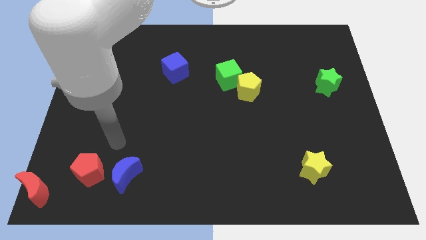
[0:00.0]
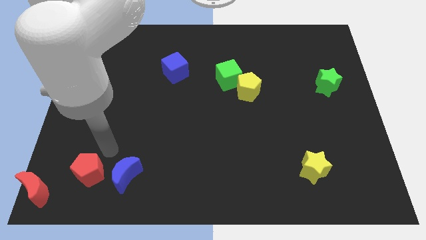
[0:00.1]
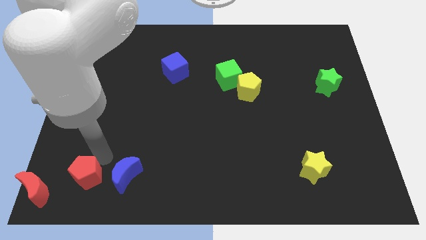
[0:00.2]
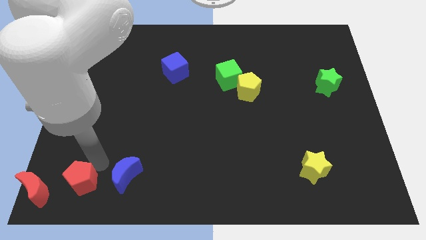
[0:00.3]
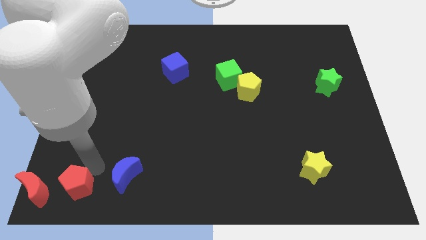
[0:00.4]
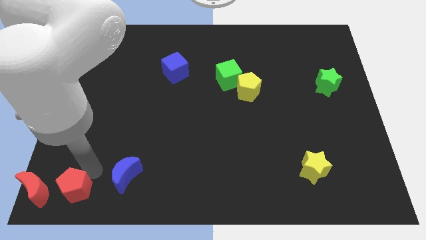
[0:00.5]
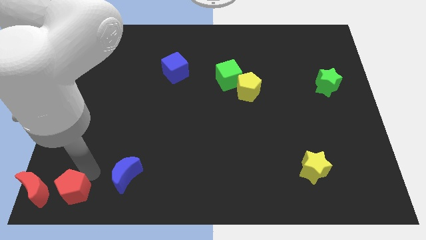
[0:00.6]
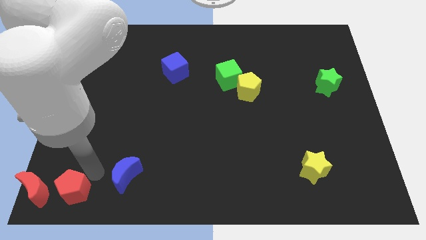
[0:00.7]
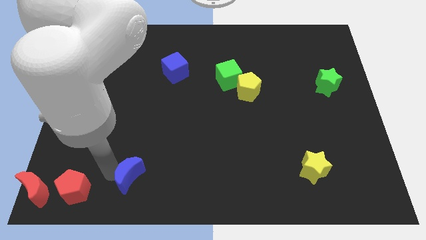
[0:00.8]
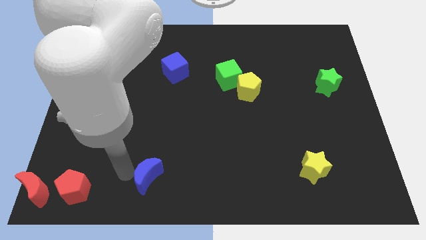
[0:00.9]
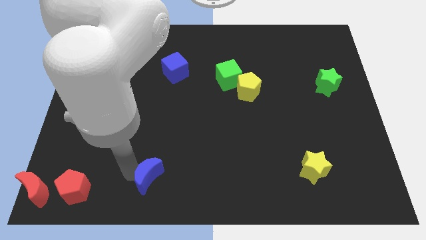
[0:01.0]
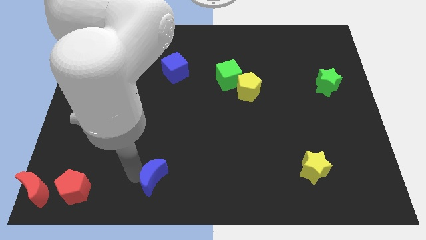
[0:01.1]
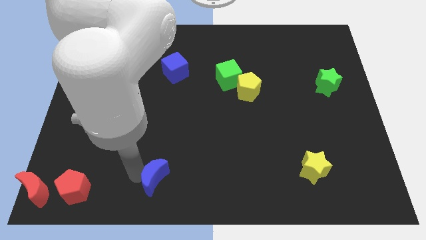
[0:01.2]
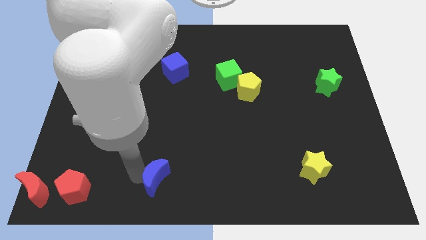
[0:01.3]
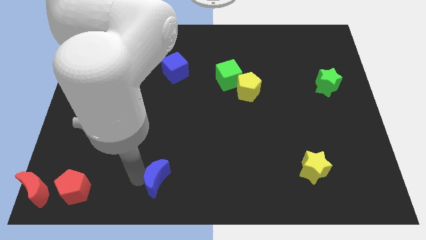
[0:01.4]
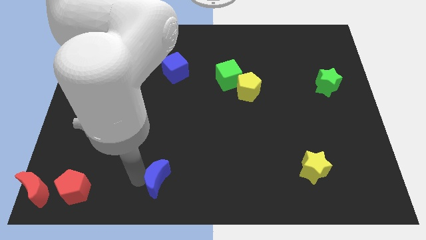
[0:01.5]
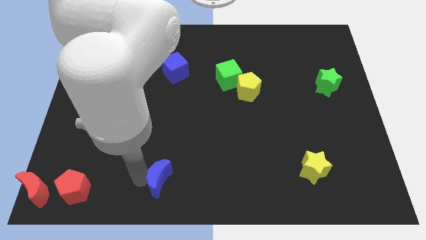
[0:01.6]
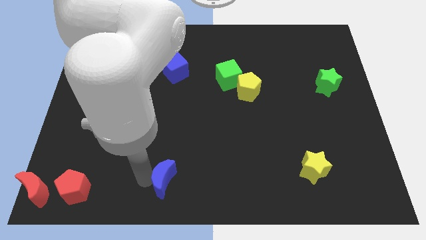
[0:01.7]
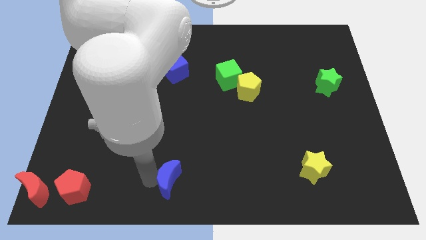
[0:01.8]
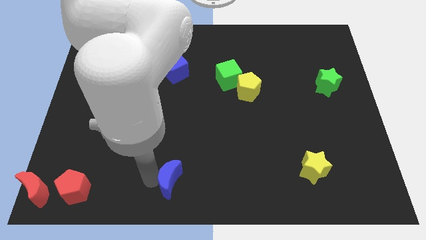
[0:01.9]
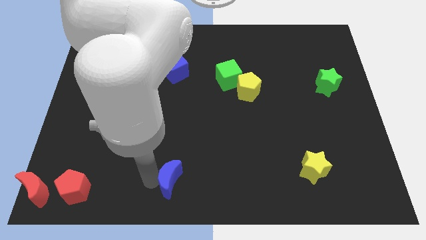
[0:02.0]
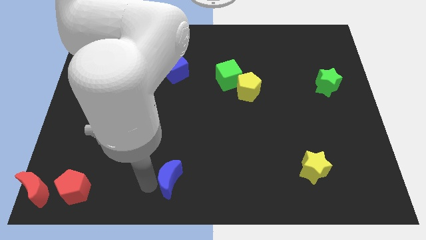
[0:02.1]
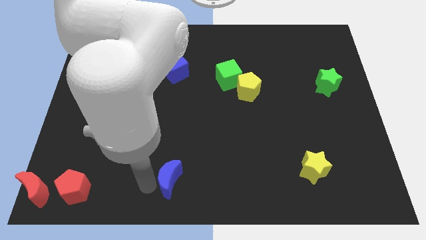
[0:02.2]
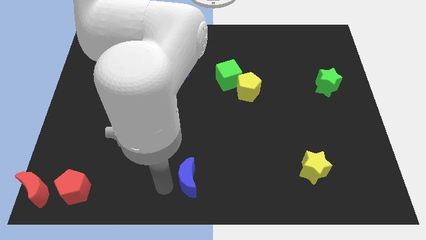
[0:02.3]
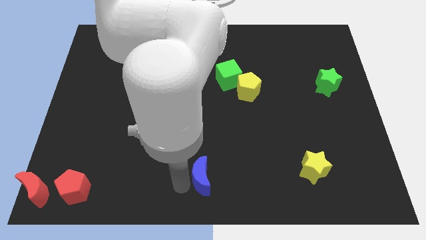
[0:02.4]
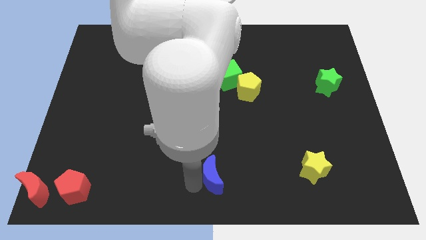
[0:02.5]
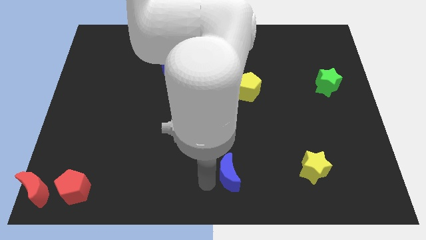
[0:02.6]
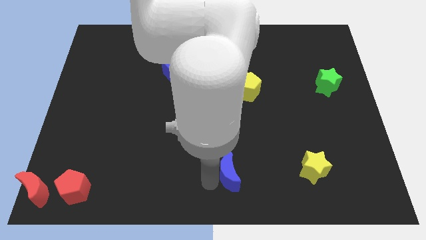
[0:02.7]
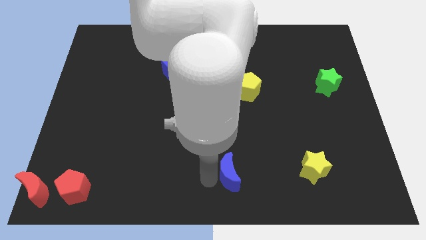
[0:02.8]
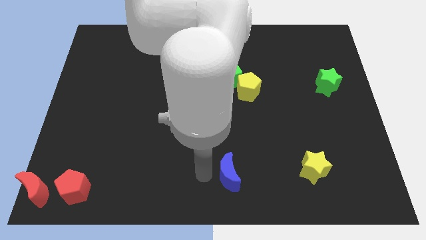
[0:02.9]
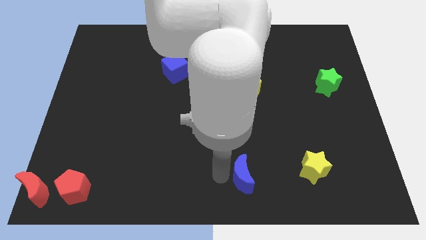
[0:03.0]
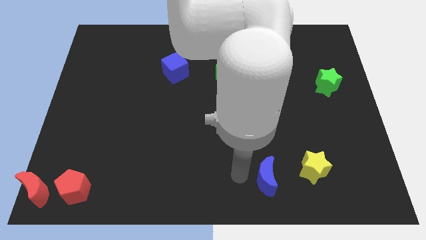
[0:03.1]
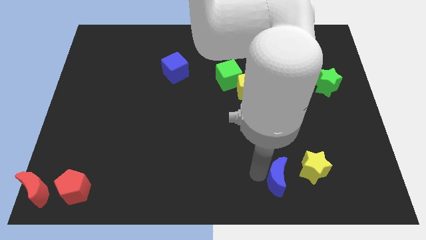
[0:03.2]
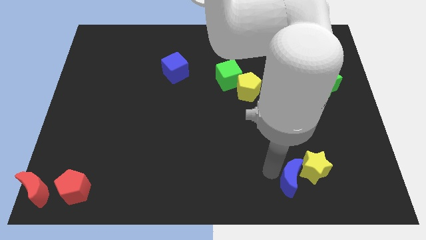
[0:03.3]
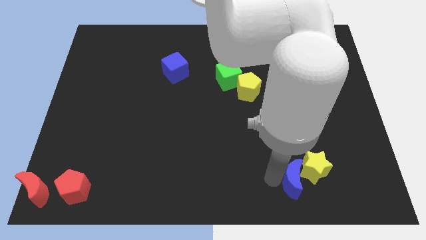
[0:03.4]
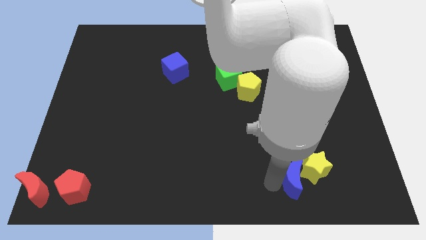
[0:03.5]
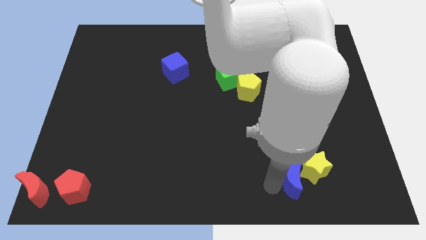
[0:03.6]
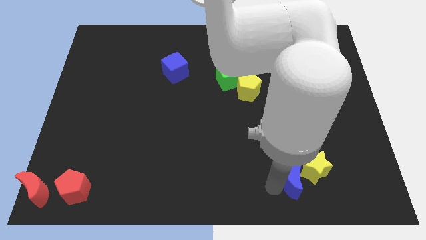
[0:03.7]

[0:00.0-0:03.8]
move the blue moon at the bottom left of the yellow star

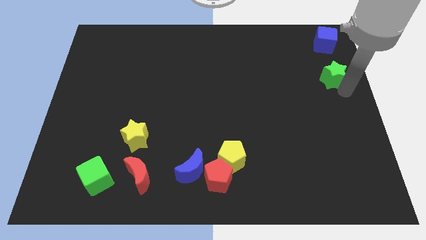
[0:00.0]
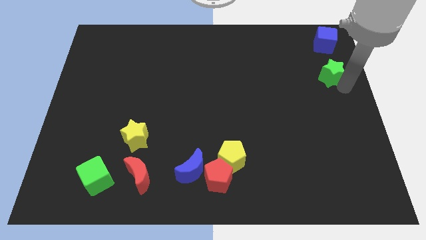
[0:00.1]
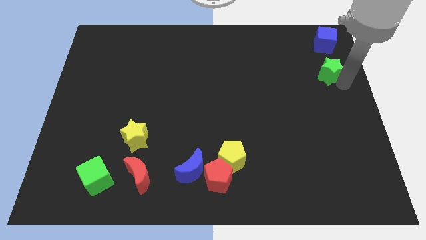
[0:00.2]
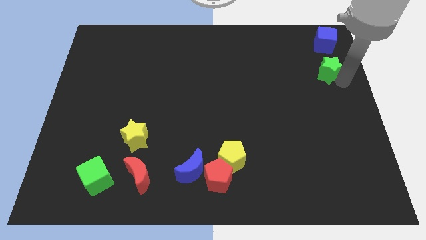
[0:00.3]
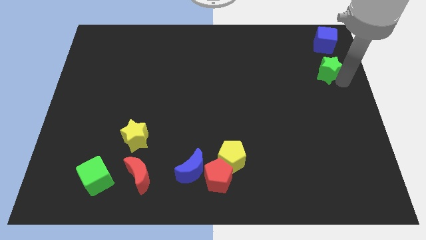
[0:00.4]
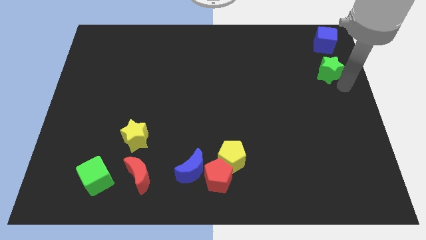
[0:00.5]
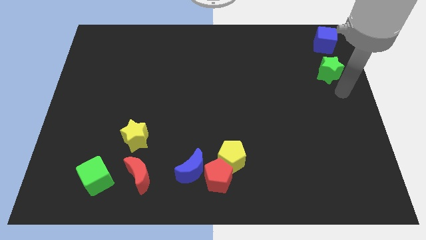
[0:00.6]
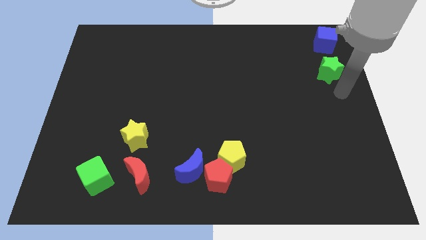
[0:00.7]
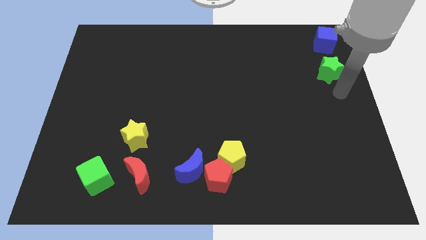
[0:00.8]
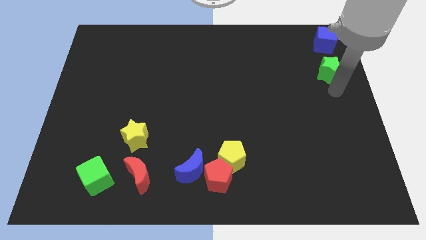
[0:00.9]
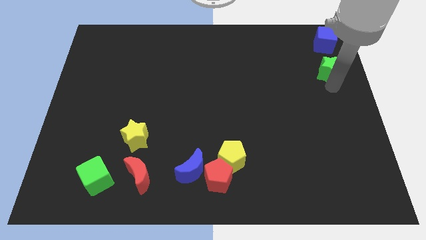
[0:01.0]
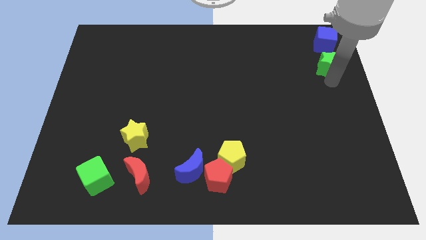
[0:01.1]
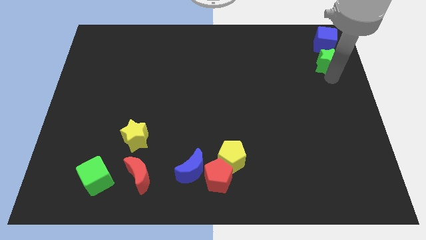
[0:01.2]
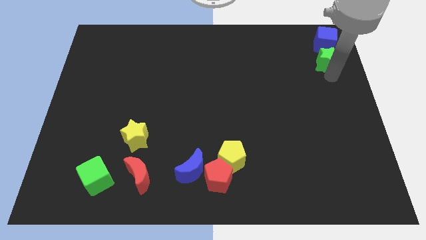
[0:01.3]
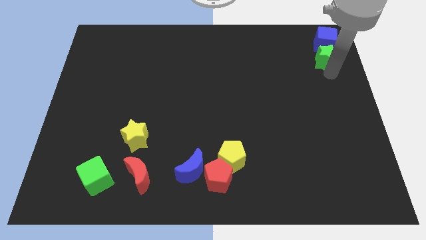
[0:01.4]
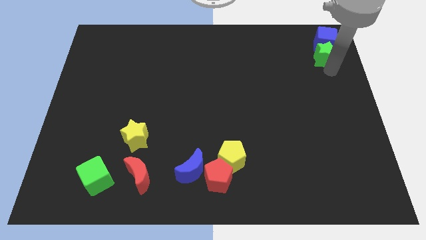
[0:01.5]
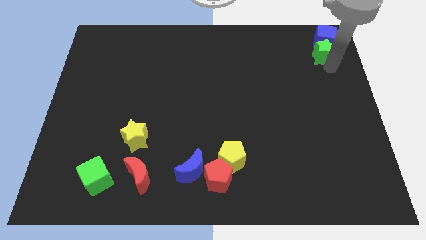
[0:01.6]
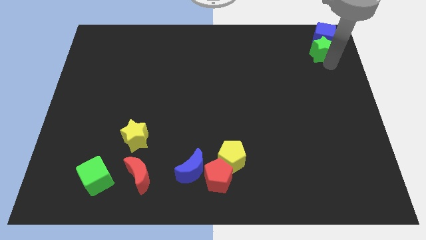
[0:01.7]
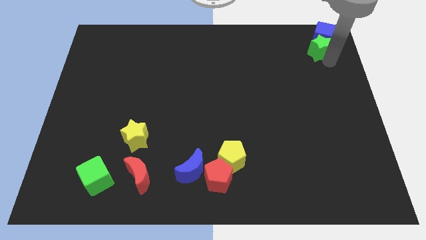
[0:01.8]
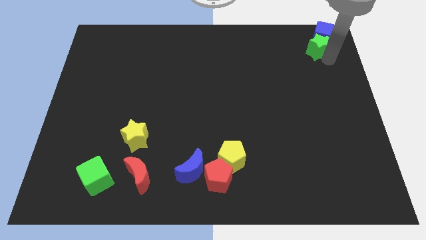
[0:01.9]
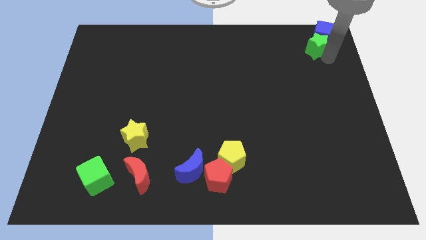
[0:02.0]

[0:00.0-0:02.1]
push the green star into the blue cube

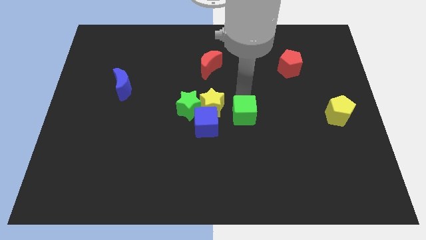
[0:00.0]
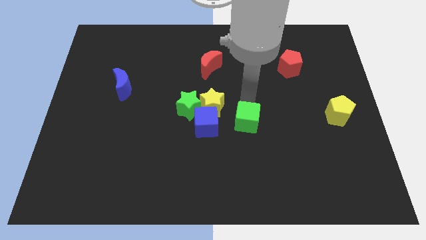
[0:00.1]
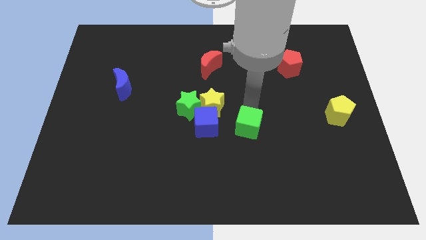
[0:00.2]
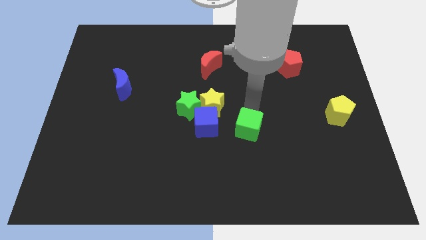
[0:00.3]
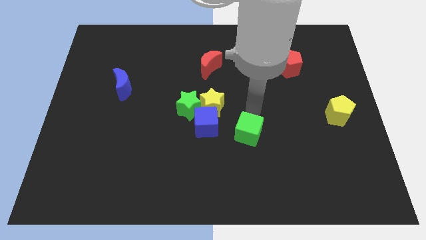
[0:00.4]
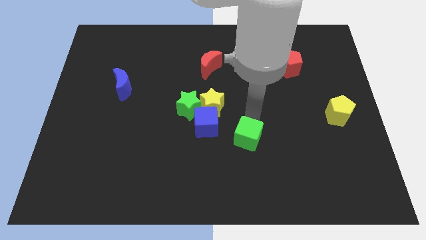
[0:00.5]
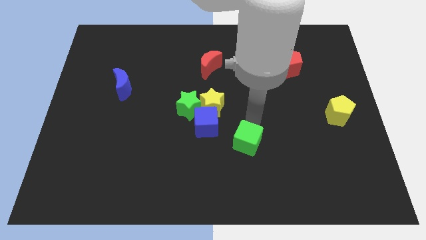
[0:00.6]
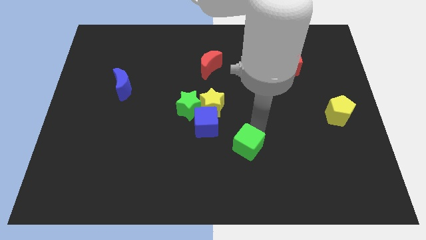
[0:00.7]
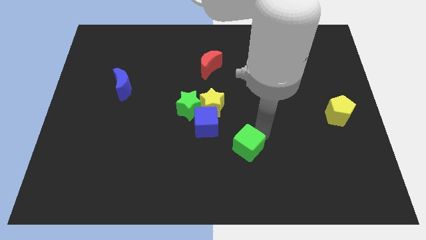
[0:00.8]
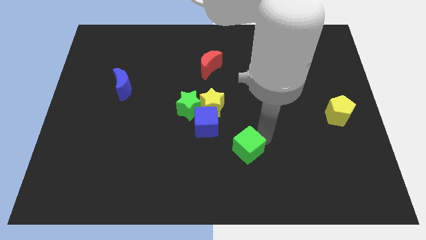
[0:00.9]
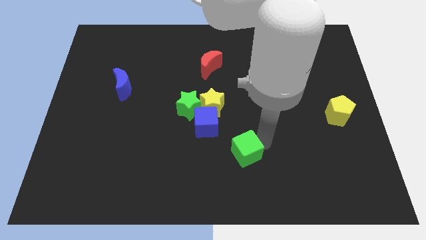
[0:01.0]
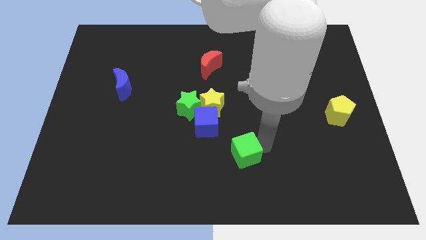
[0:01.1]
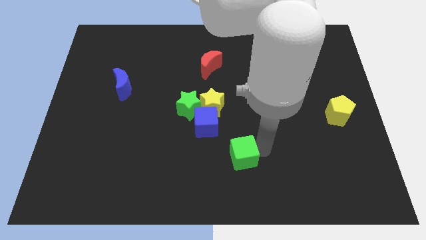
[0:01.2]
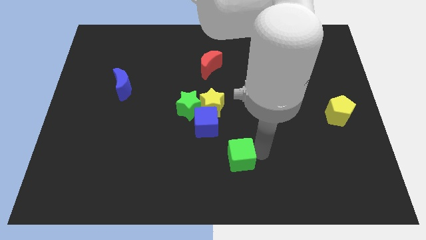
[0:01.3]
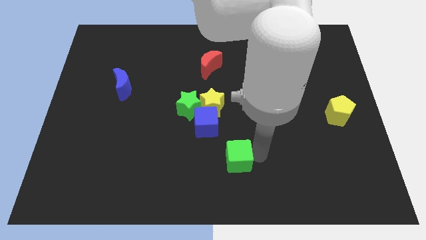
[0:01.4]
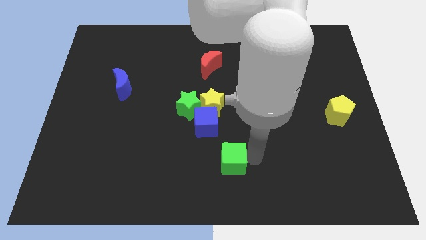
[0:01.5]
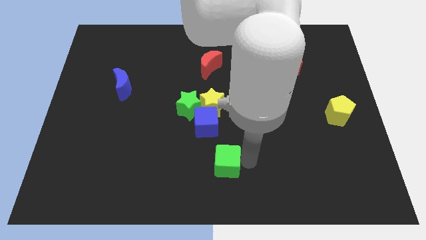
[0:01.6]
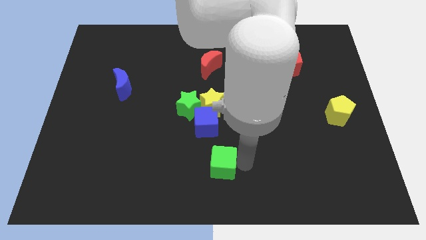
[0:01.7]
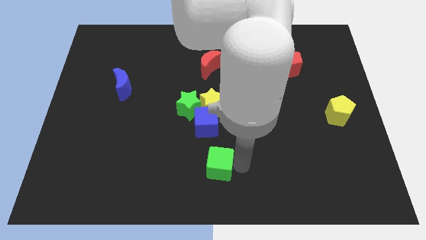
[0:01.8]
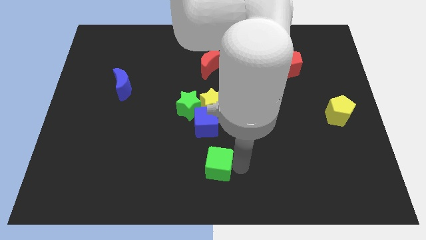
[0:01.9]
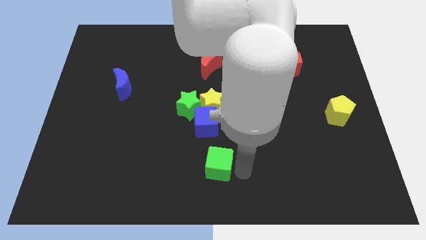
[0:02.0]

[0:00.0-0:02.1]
push the green cube towards the bottom of the board

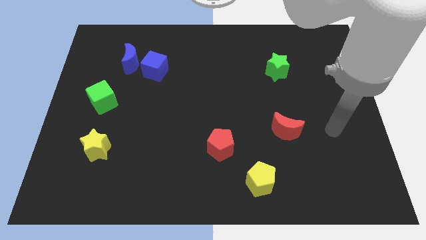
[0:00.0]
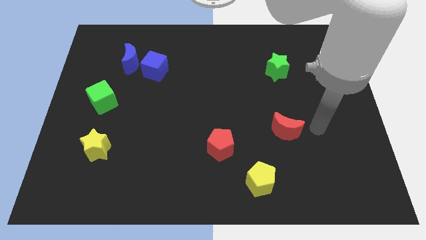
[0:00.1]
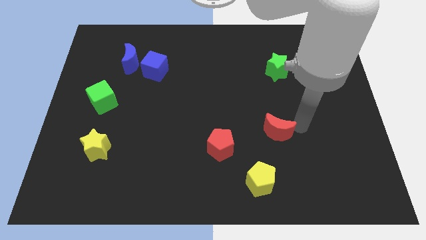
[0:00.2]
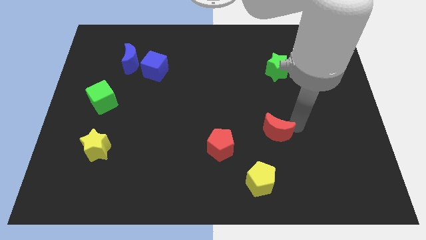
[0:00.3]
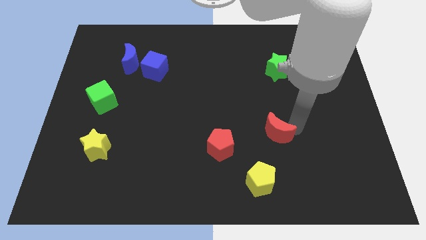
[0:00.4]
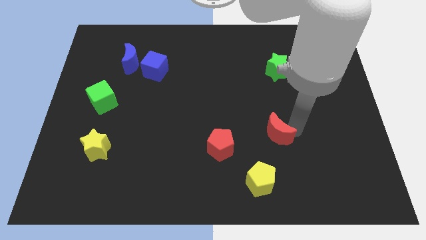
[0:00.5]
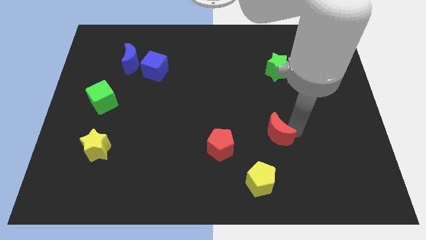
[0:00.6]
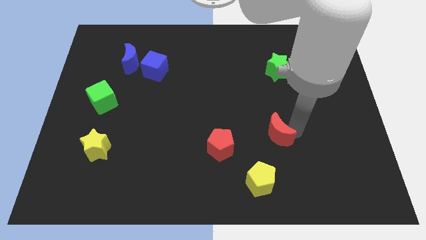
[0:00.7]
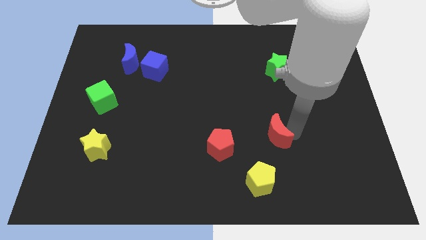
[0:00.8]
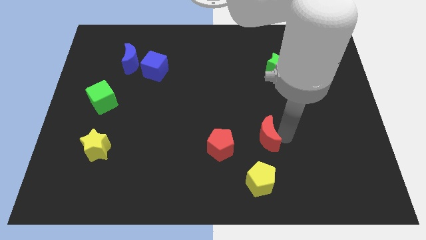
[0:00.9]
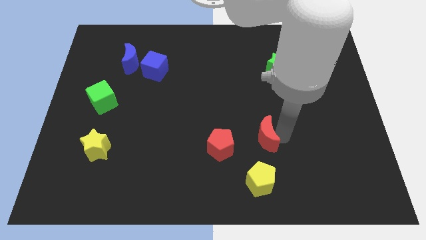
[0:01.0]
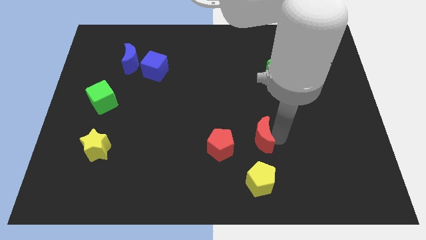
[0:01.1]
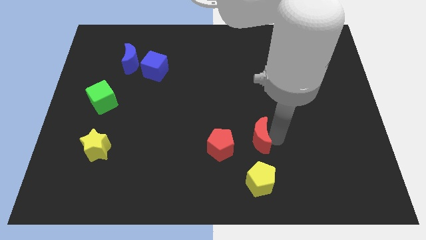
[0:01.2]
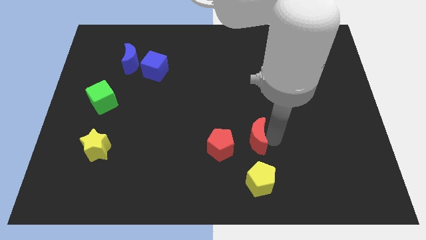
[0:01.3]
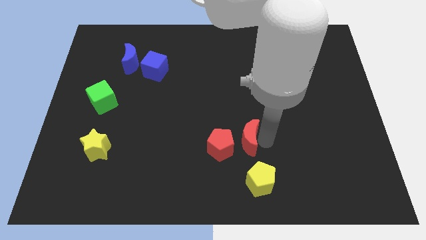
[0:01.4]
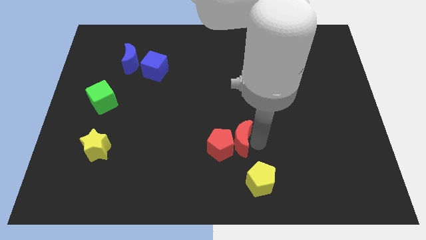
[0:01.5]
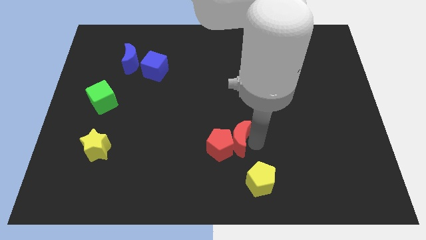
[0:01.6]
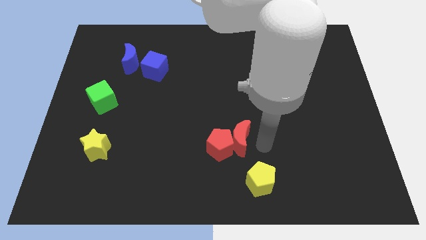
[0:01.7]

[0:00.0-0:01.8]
move the red moon to the right of the red pentagon
